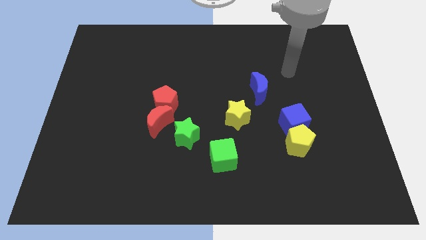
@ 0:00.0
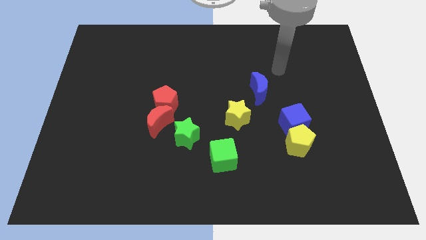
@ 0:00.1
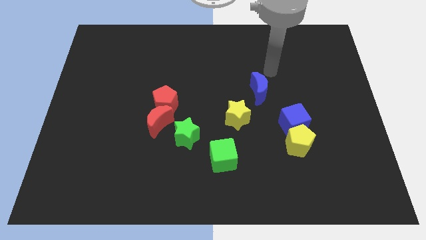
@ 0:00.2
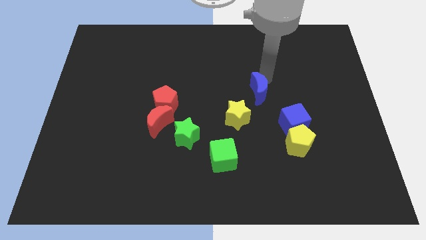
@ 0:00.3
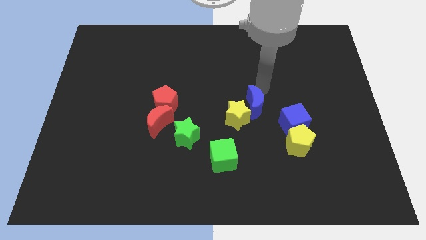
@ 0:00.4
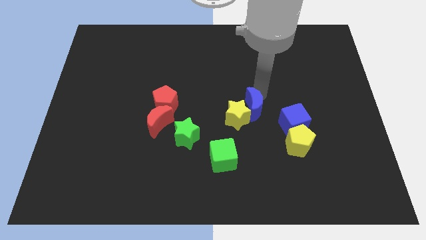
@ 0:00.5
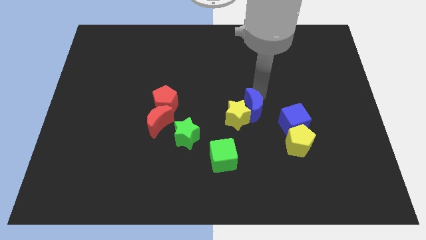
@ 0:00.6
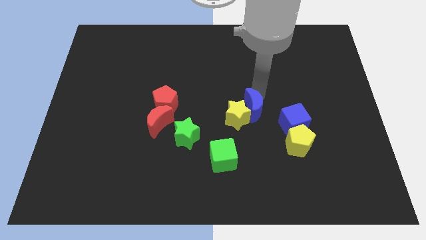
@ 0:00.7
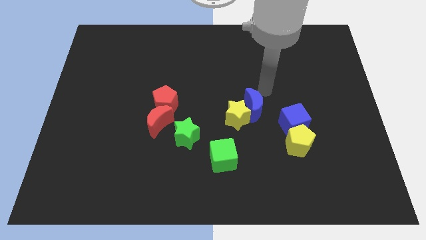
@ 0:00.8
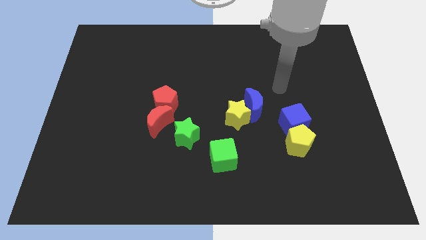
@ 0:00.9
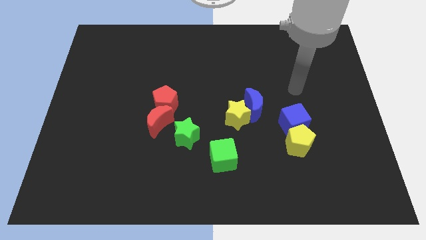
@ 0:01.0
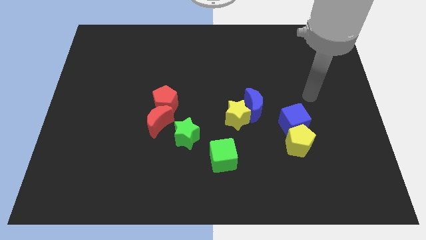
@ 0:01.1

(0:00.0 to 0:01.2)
place the blue crescent close to the yellow star

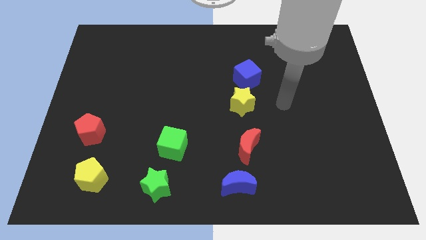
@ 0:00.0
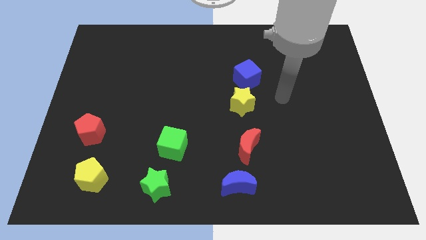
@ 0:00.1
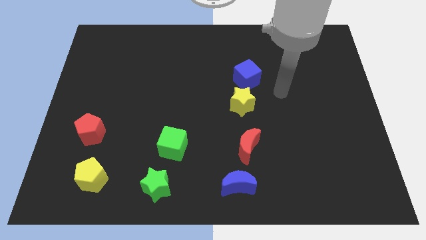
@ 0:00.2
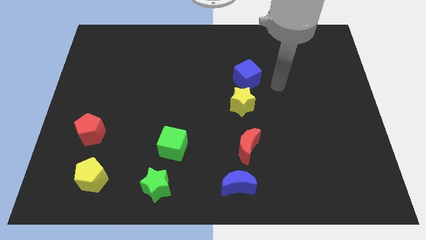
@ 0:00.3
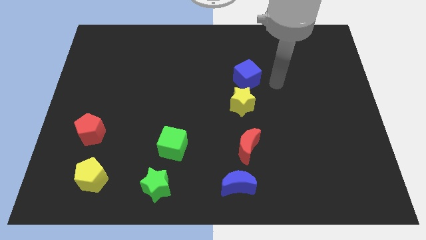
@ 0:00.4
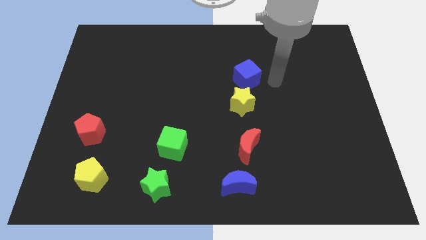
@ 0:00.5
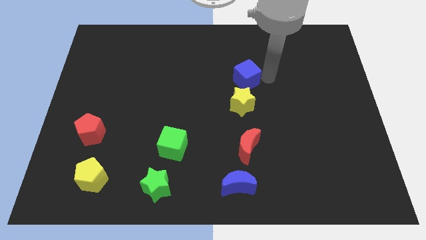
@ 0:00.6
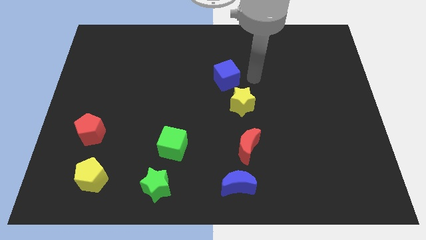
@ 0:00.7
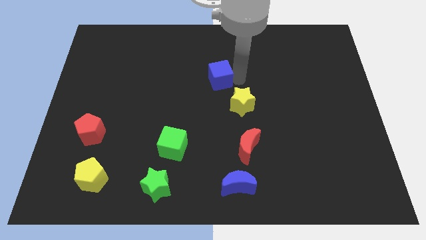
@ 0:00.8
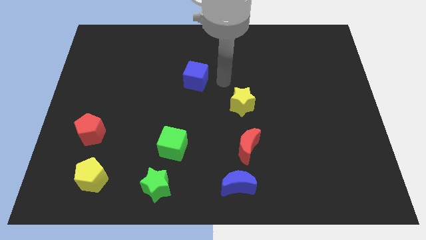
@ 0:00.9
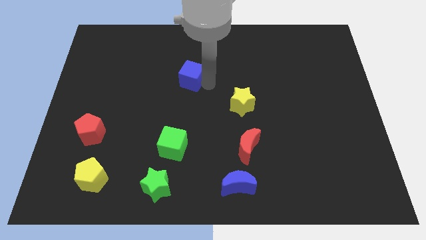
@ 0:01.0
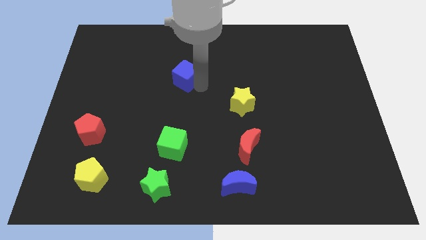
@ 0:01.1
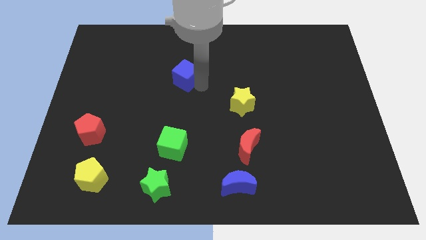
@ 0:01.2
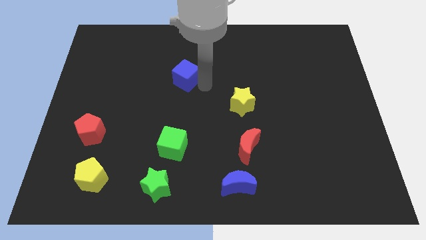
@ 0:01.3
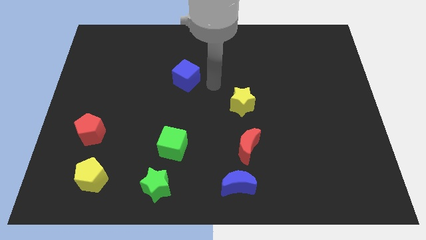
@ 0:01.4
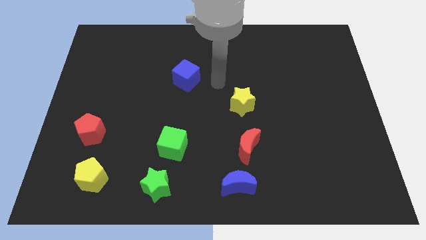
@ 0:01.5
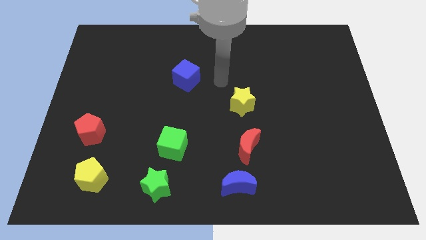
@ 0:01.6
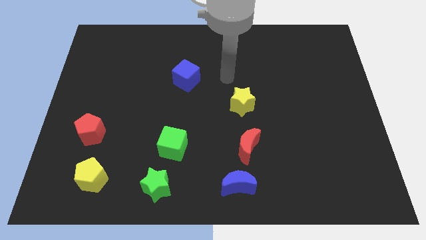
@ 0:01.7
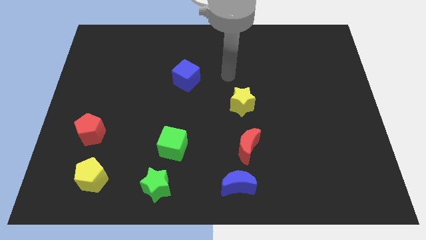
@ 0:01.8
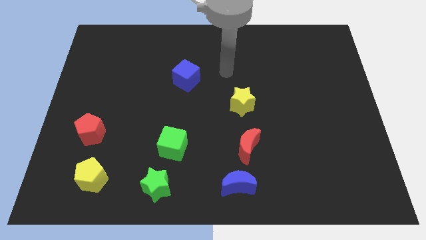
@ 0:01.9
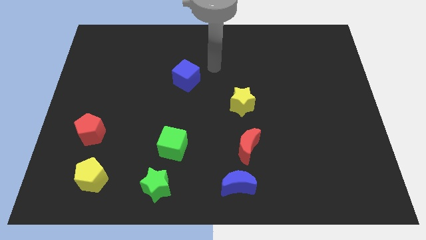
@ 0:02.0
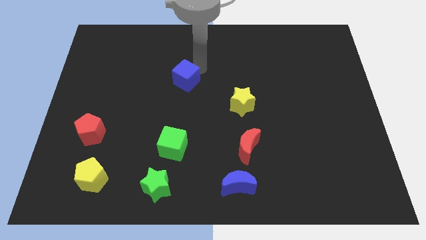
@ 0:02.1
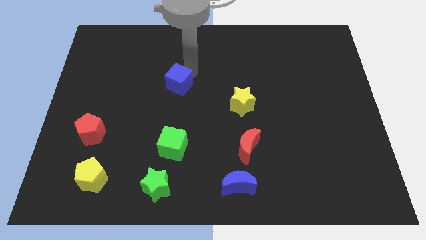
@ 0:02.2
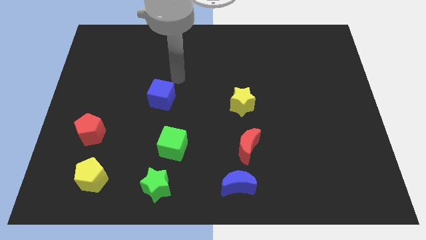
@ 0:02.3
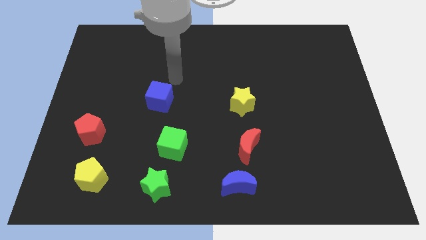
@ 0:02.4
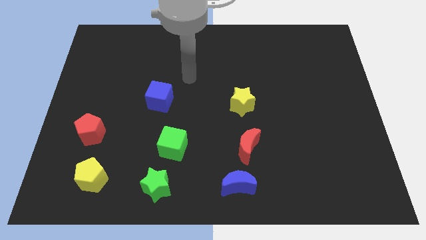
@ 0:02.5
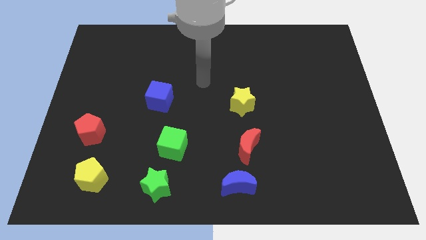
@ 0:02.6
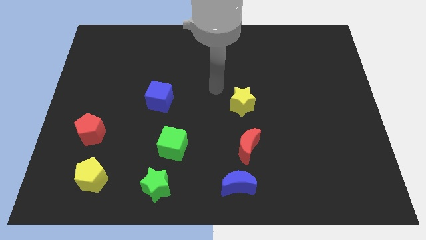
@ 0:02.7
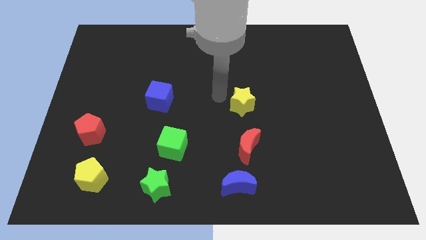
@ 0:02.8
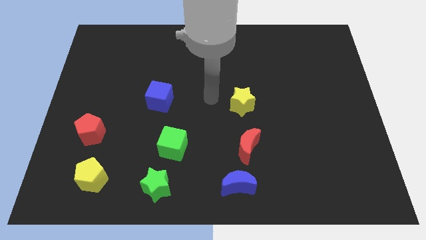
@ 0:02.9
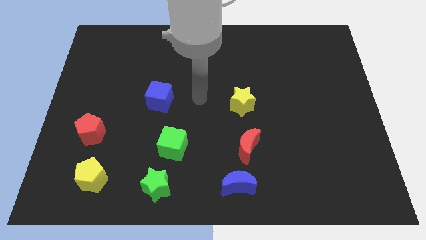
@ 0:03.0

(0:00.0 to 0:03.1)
put the blue cube to the left of the yellow star

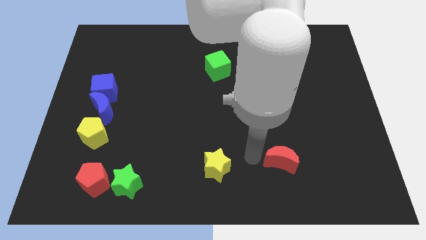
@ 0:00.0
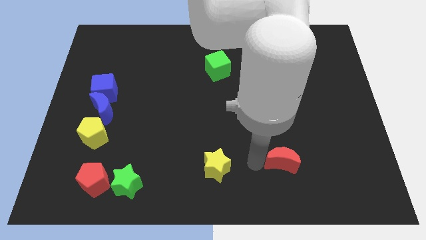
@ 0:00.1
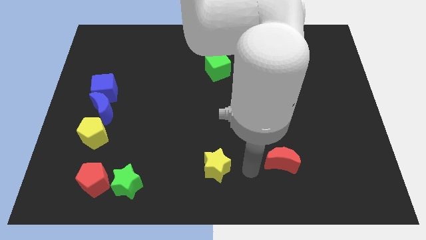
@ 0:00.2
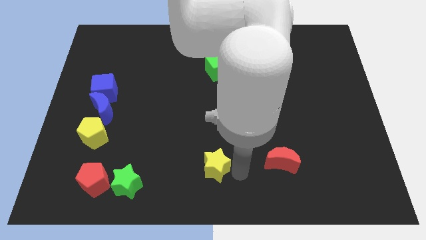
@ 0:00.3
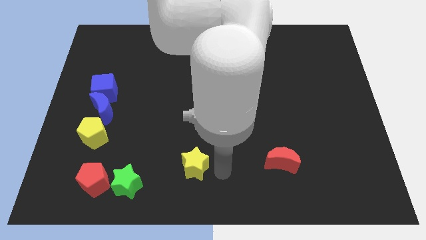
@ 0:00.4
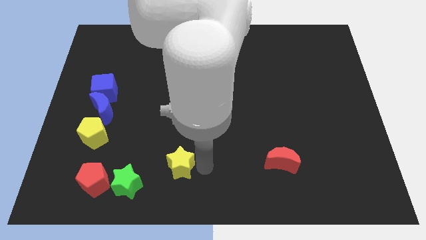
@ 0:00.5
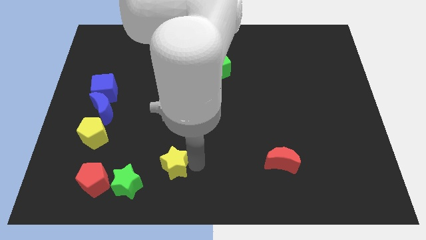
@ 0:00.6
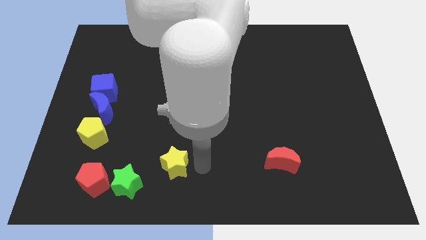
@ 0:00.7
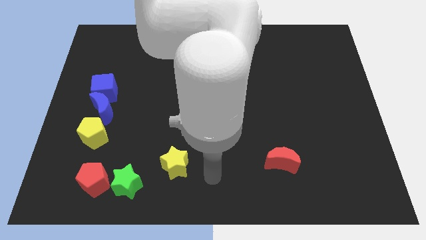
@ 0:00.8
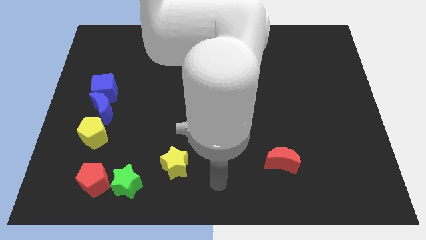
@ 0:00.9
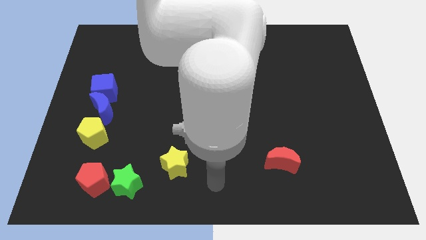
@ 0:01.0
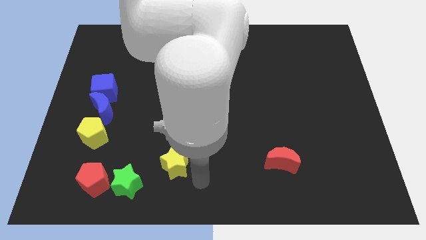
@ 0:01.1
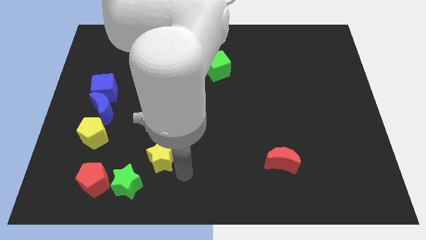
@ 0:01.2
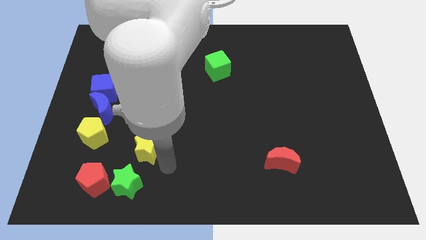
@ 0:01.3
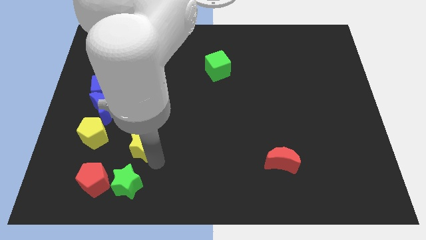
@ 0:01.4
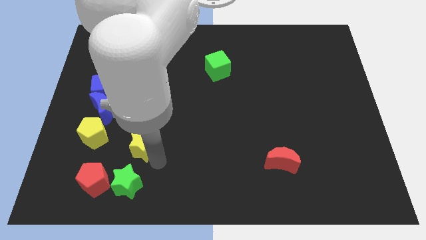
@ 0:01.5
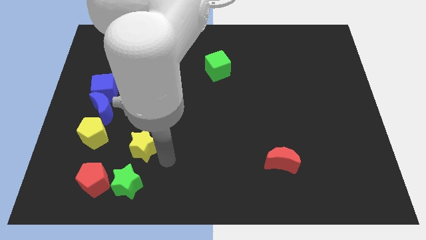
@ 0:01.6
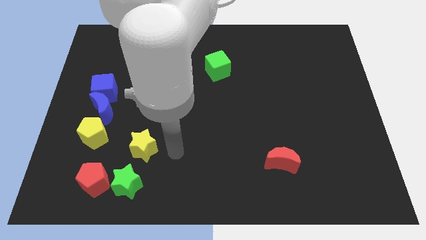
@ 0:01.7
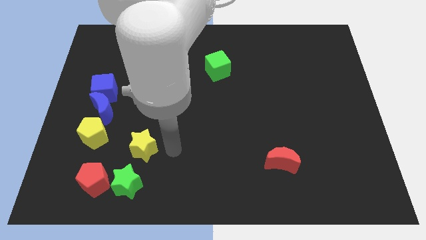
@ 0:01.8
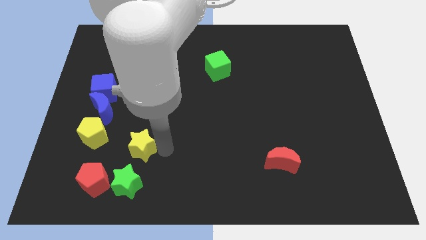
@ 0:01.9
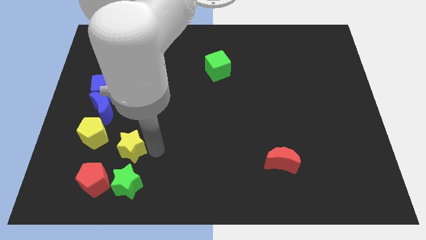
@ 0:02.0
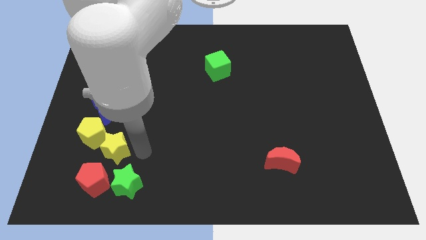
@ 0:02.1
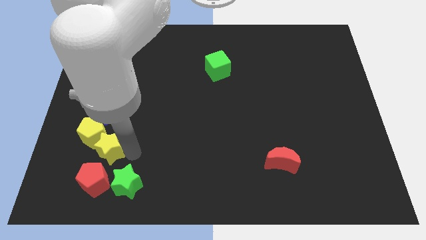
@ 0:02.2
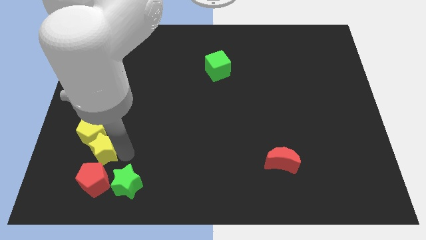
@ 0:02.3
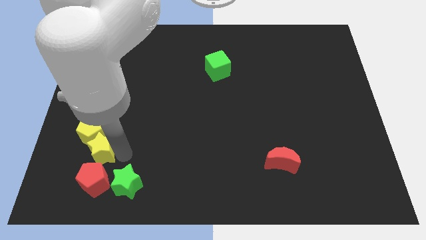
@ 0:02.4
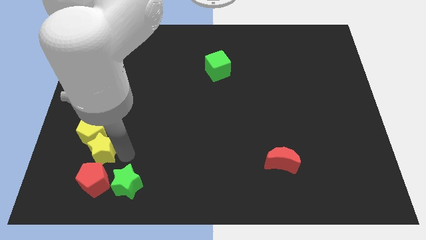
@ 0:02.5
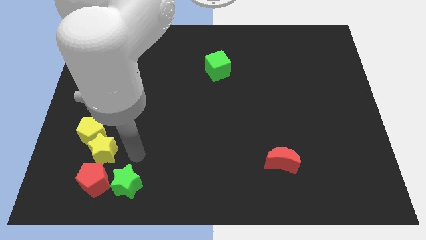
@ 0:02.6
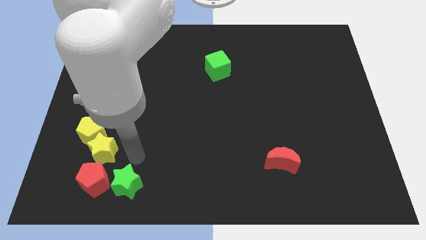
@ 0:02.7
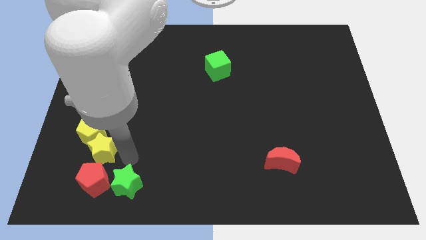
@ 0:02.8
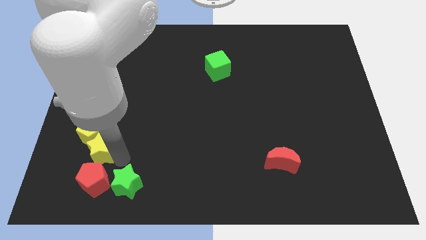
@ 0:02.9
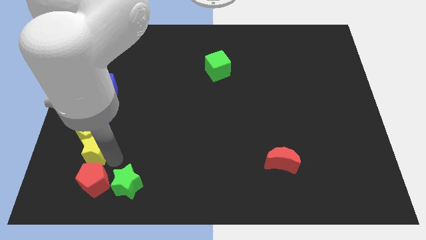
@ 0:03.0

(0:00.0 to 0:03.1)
push the yellow star to the top of red pentagon

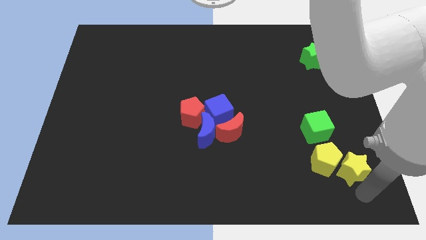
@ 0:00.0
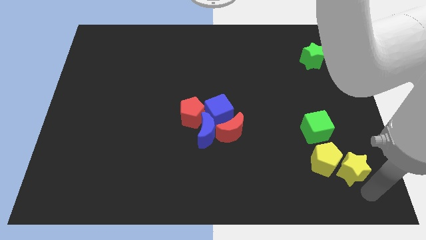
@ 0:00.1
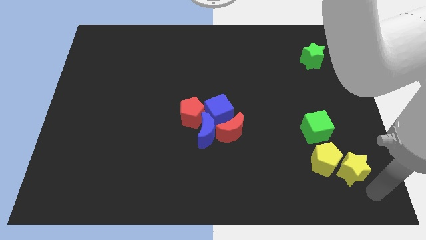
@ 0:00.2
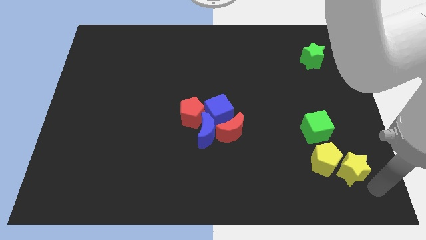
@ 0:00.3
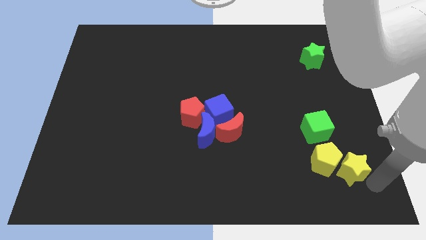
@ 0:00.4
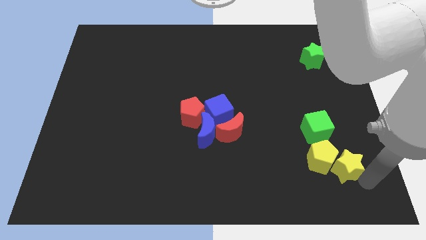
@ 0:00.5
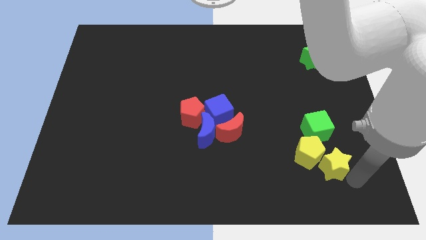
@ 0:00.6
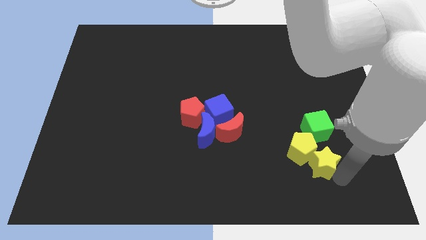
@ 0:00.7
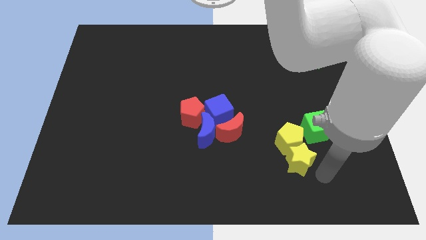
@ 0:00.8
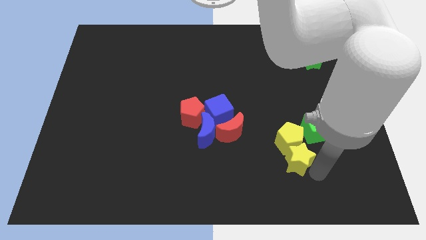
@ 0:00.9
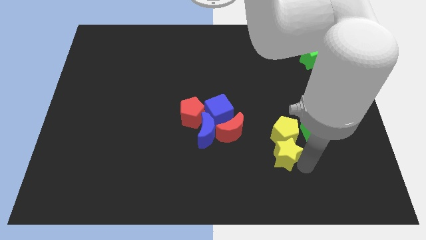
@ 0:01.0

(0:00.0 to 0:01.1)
place yellow star to the bottom left of the green cube

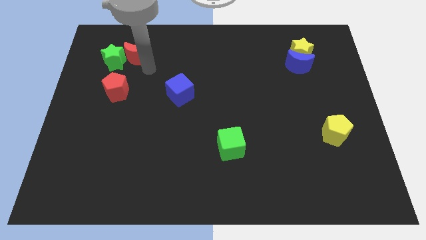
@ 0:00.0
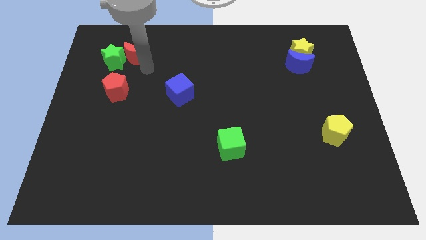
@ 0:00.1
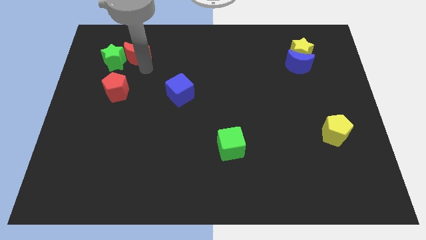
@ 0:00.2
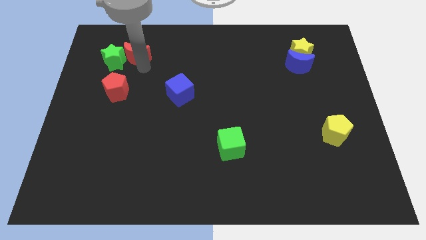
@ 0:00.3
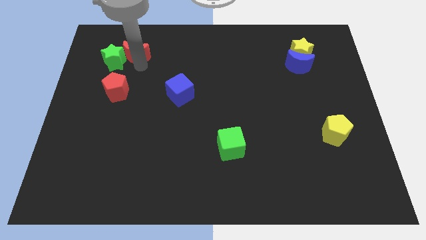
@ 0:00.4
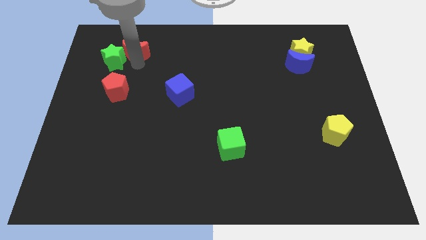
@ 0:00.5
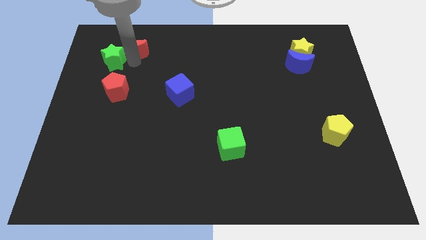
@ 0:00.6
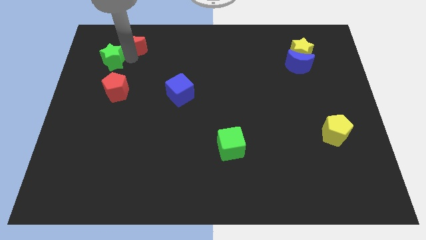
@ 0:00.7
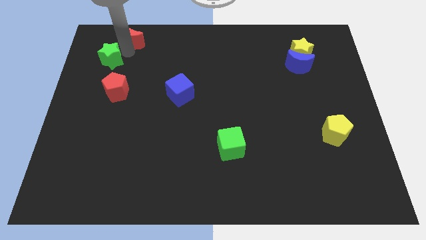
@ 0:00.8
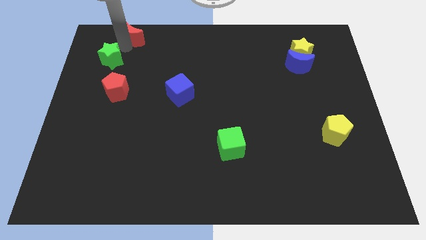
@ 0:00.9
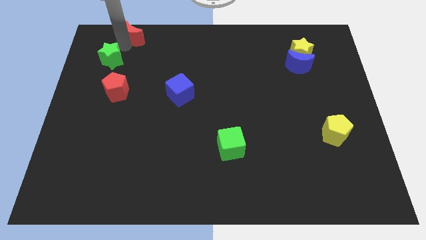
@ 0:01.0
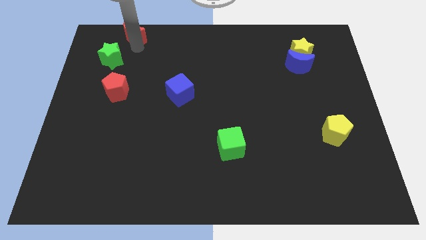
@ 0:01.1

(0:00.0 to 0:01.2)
separate the red crescent and green star
